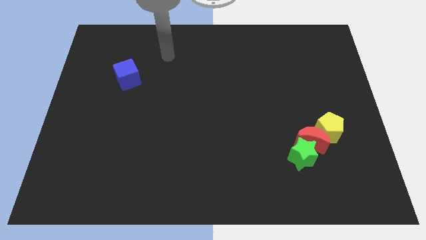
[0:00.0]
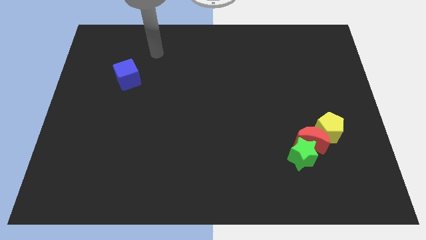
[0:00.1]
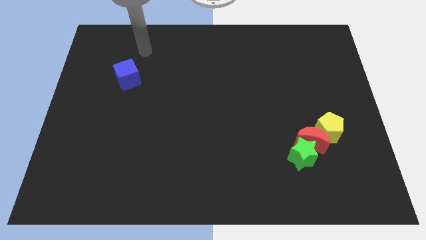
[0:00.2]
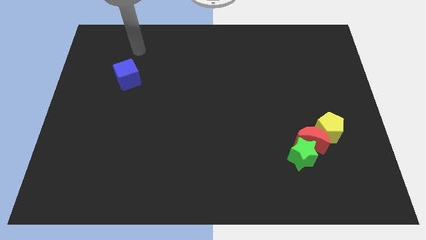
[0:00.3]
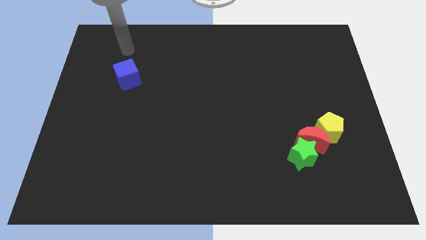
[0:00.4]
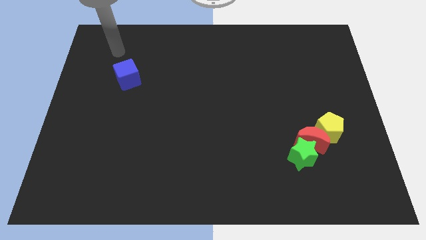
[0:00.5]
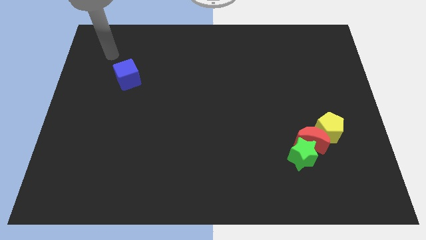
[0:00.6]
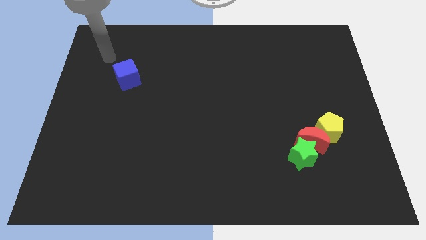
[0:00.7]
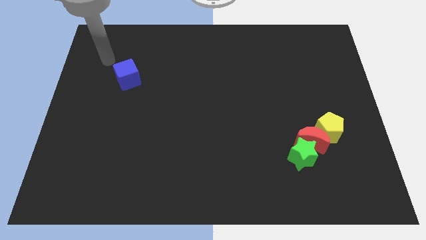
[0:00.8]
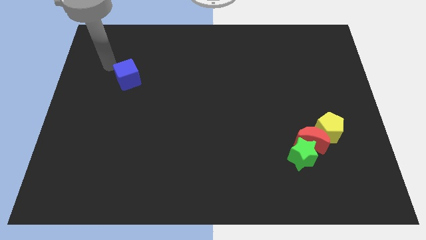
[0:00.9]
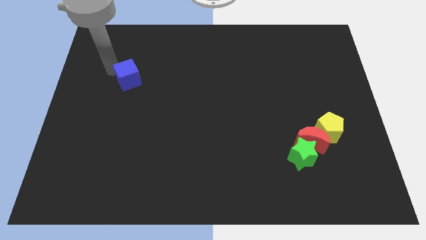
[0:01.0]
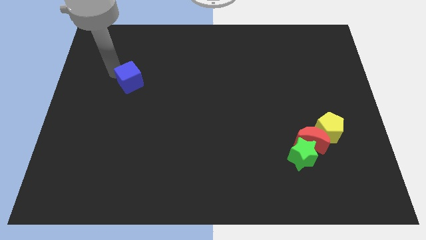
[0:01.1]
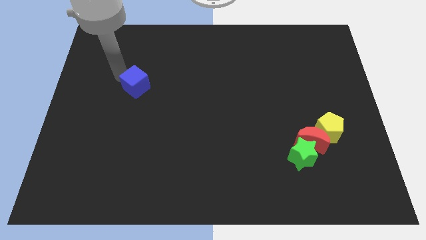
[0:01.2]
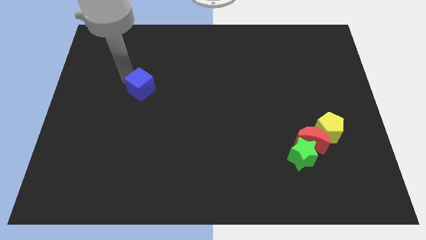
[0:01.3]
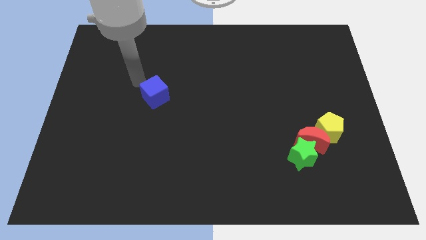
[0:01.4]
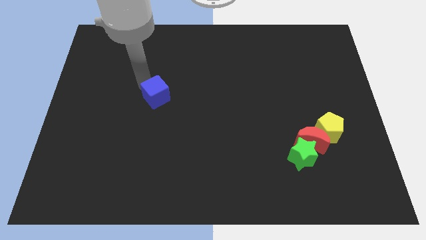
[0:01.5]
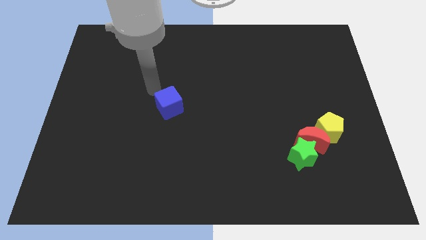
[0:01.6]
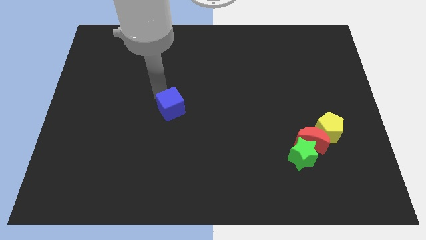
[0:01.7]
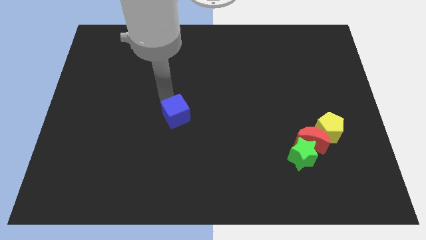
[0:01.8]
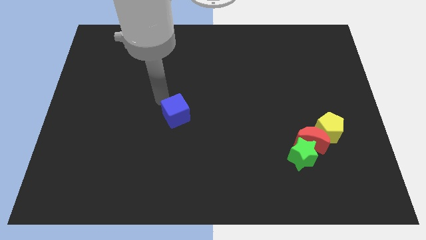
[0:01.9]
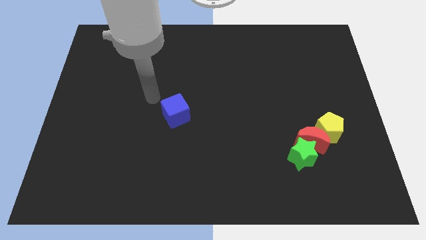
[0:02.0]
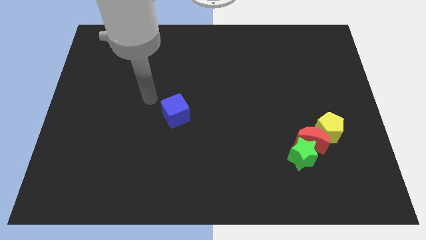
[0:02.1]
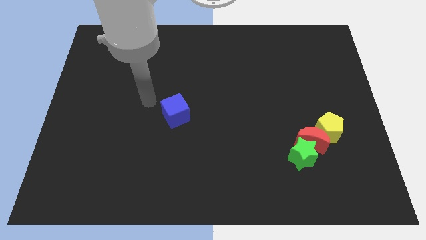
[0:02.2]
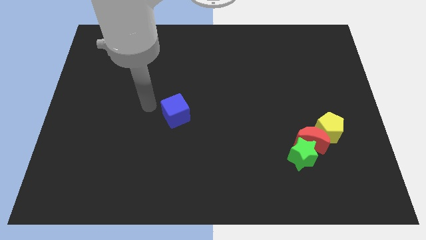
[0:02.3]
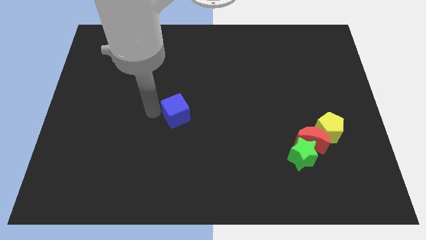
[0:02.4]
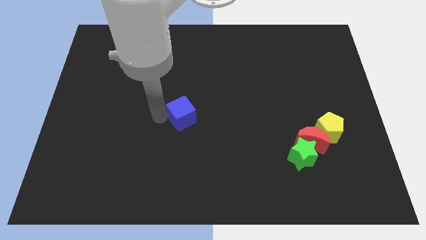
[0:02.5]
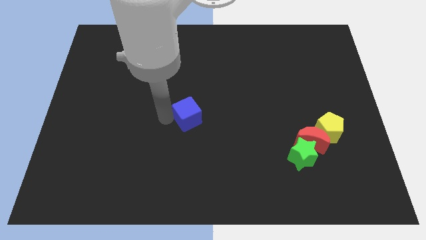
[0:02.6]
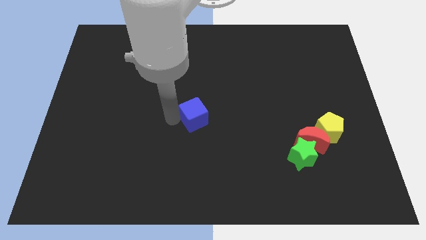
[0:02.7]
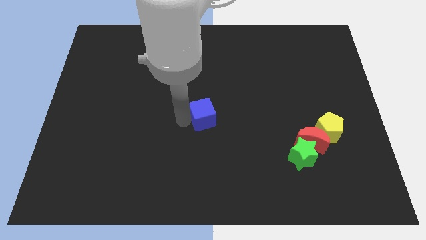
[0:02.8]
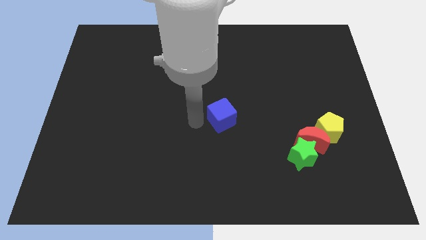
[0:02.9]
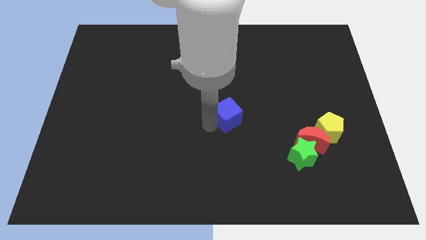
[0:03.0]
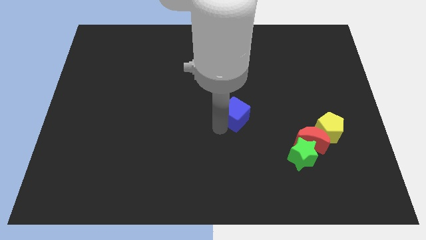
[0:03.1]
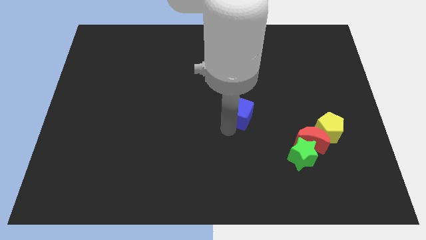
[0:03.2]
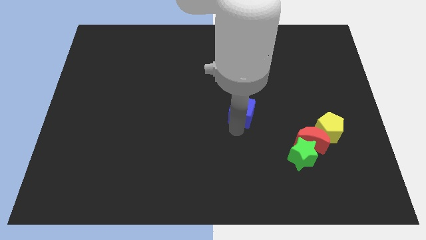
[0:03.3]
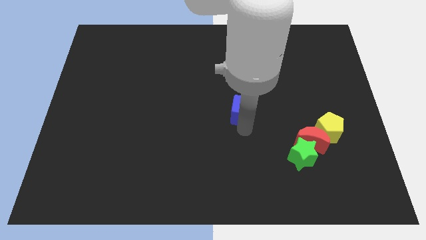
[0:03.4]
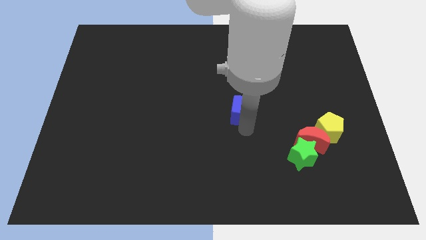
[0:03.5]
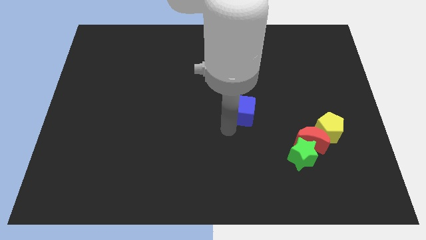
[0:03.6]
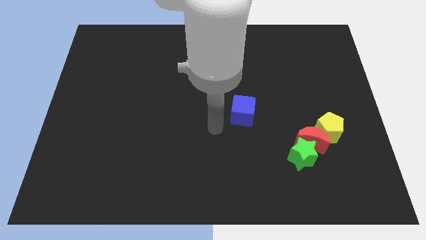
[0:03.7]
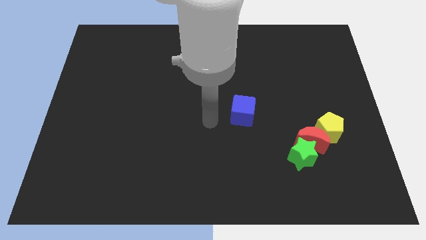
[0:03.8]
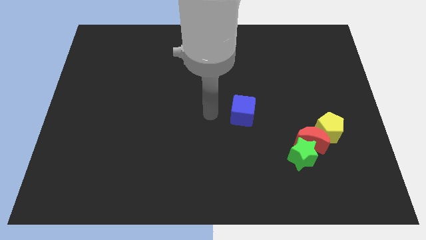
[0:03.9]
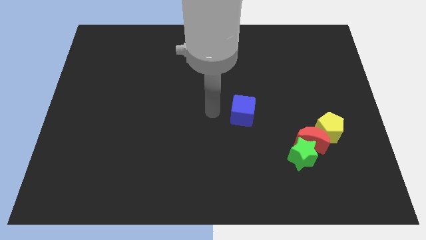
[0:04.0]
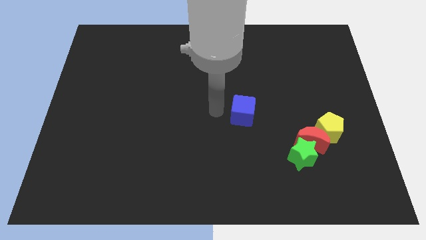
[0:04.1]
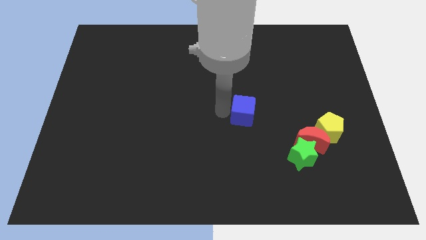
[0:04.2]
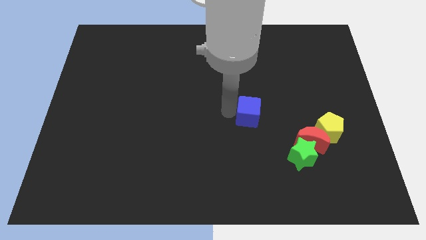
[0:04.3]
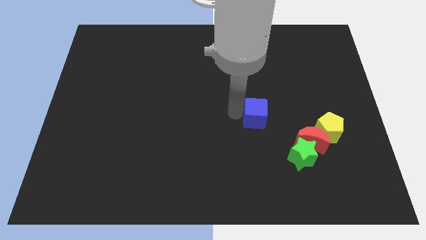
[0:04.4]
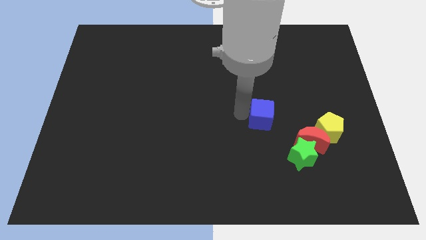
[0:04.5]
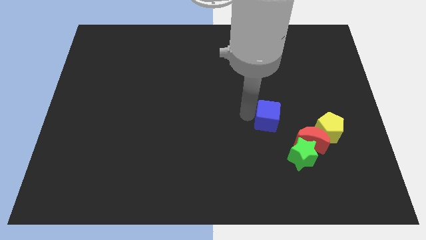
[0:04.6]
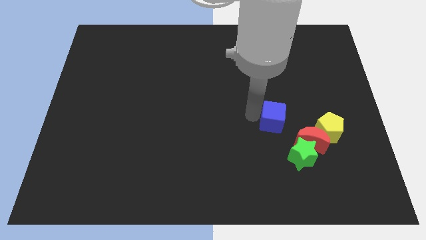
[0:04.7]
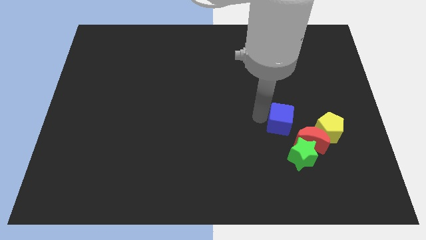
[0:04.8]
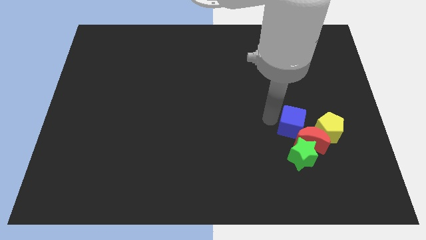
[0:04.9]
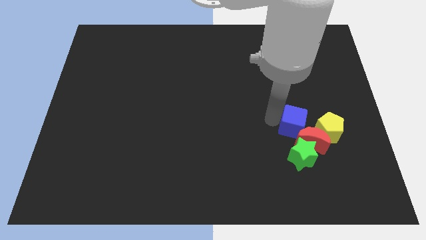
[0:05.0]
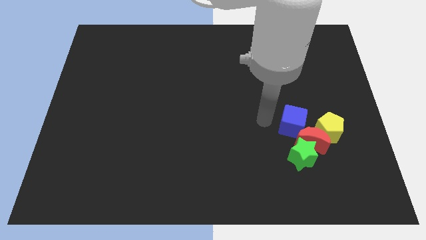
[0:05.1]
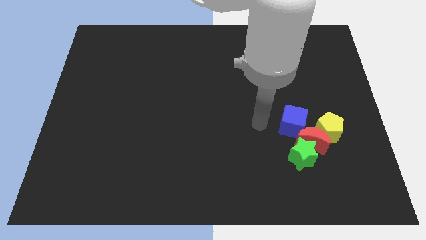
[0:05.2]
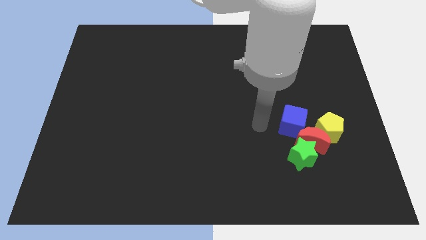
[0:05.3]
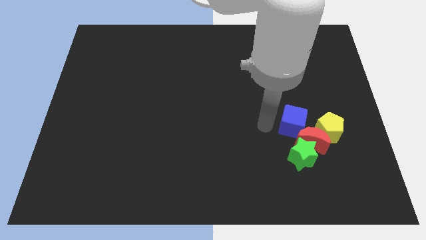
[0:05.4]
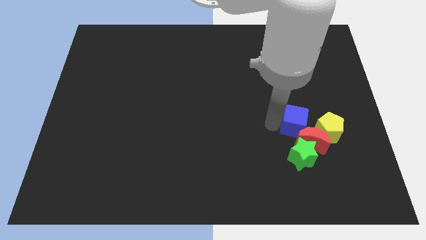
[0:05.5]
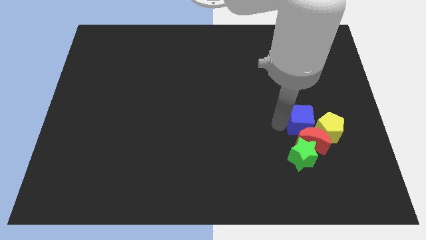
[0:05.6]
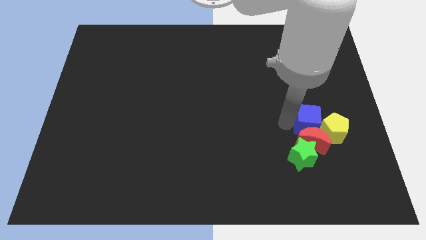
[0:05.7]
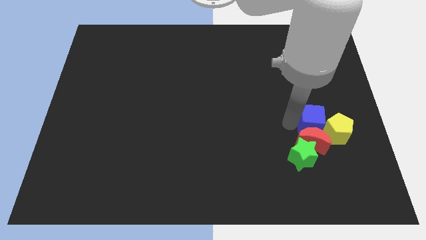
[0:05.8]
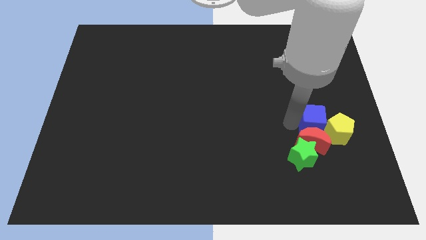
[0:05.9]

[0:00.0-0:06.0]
push the cube close to the yellow pentagon

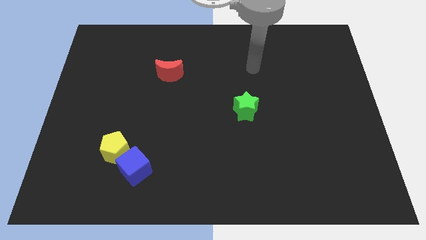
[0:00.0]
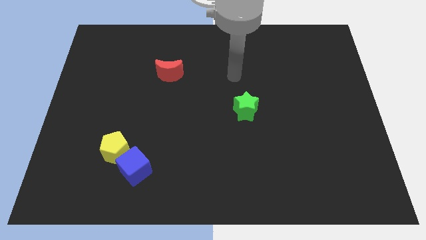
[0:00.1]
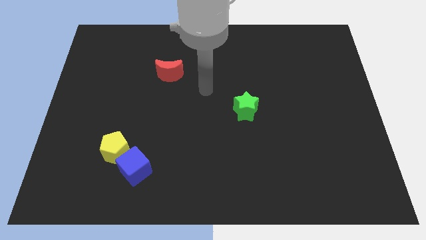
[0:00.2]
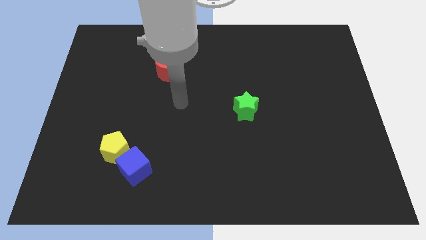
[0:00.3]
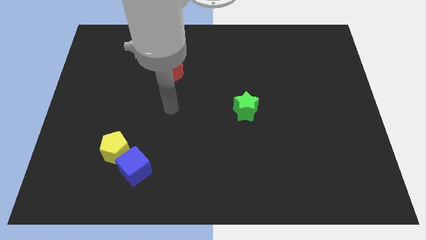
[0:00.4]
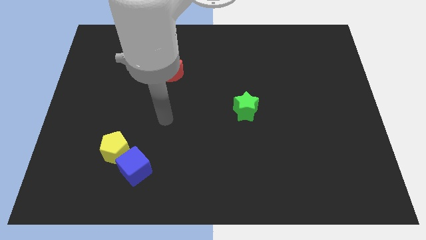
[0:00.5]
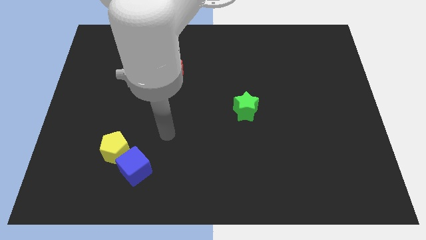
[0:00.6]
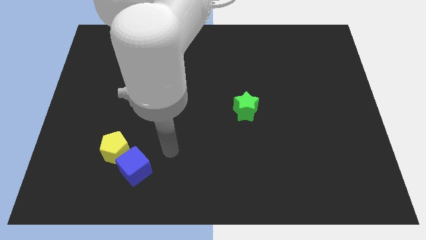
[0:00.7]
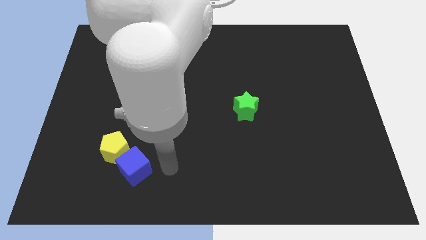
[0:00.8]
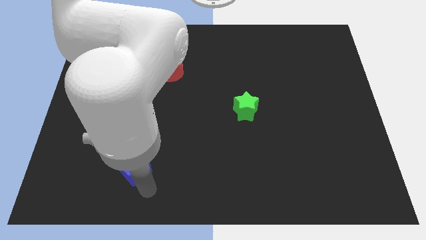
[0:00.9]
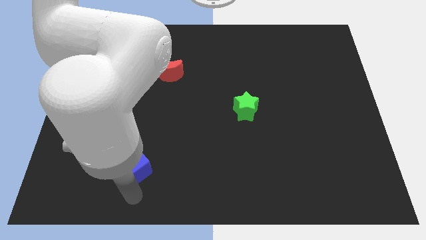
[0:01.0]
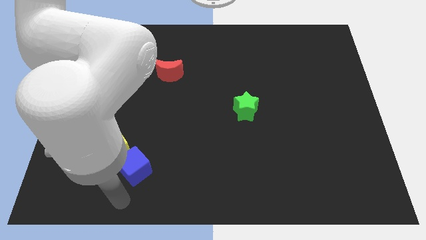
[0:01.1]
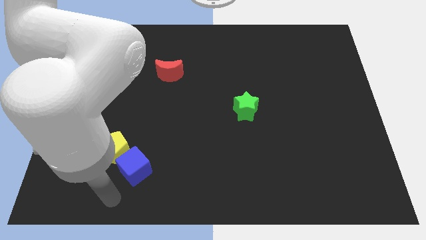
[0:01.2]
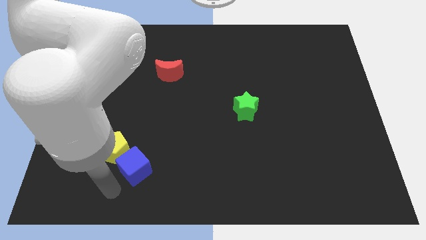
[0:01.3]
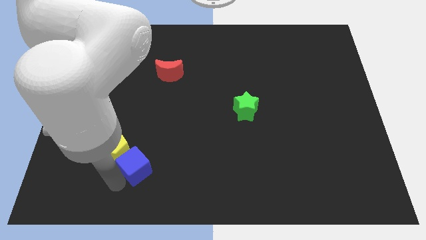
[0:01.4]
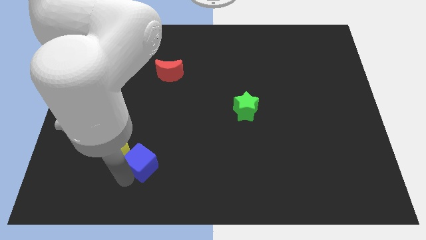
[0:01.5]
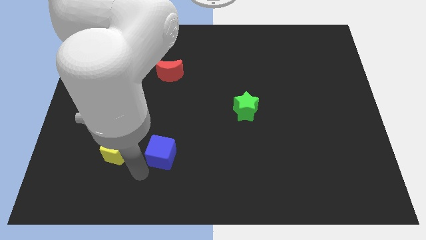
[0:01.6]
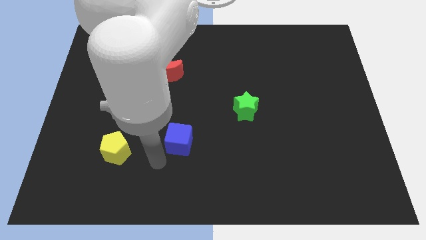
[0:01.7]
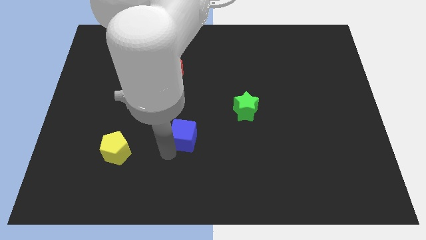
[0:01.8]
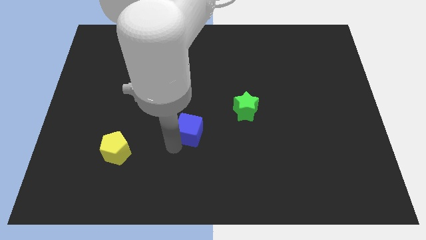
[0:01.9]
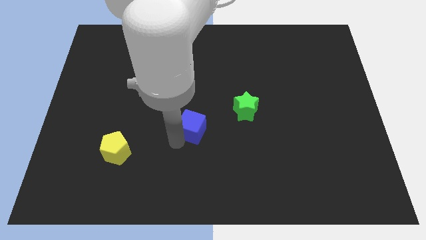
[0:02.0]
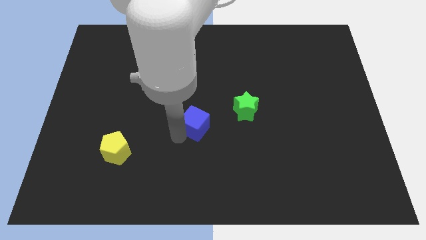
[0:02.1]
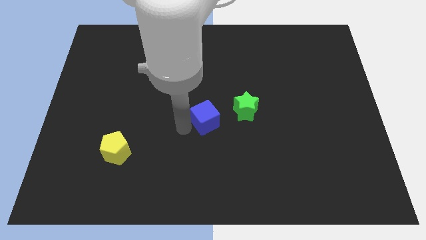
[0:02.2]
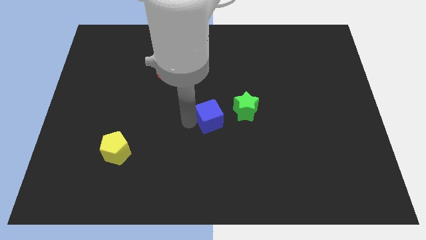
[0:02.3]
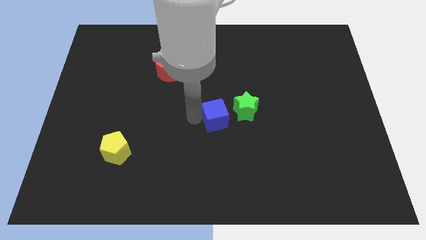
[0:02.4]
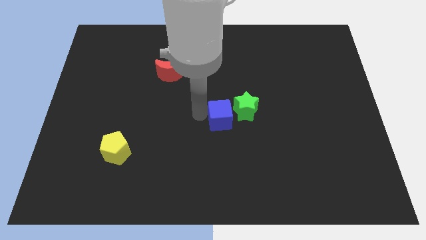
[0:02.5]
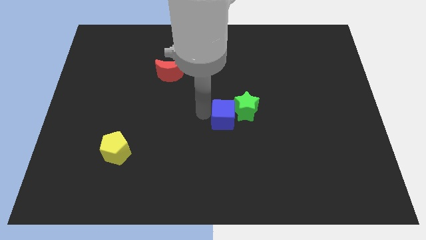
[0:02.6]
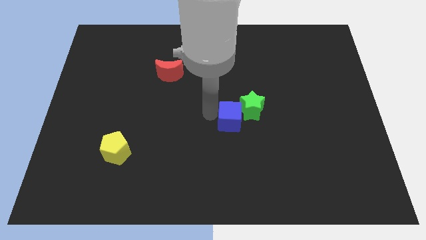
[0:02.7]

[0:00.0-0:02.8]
push the cube towards the star
